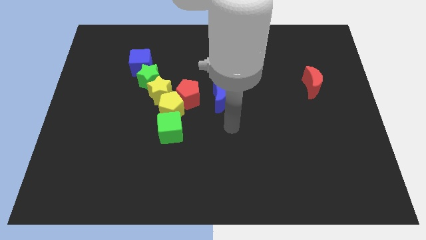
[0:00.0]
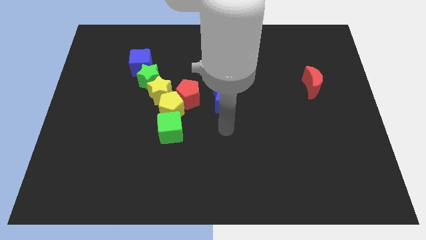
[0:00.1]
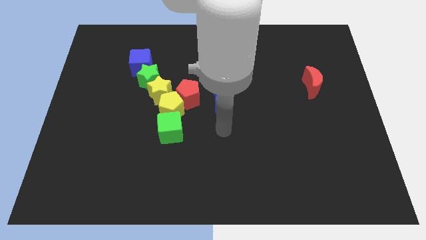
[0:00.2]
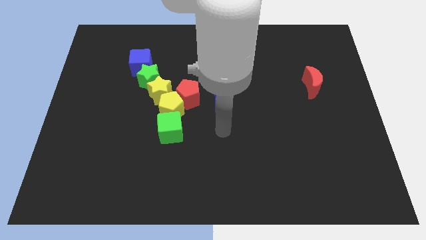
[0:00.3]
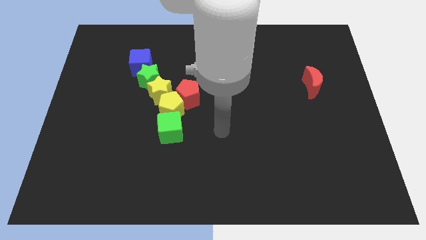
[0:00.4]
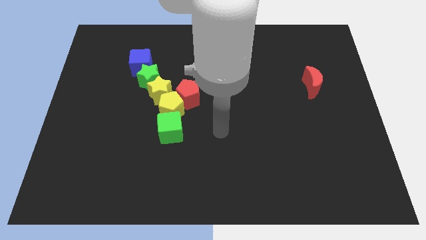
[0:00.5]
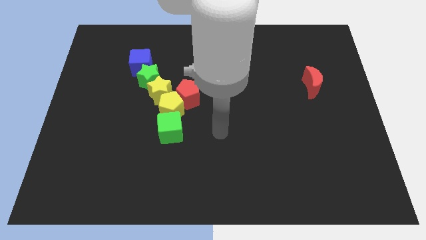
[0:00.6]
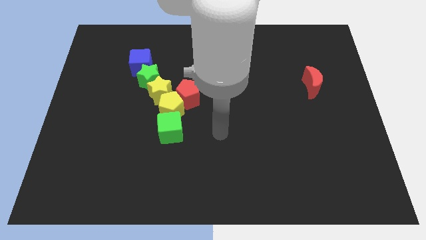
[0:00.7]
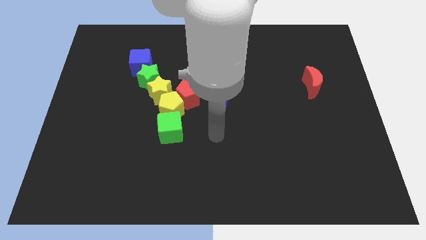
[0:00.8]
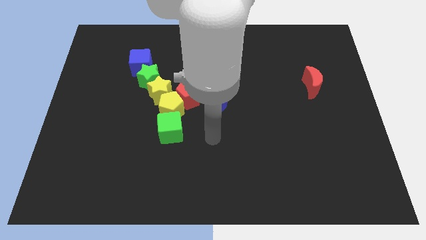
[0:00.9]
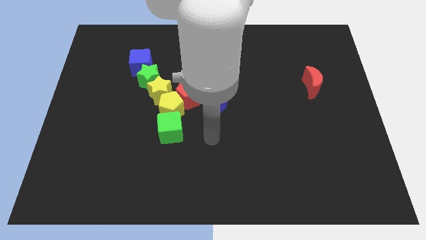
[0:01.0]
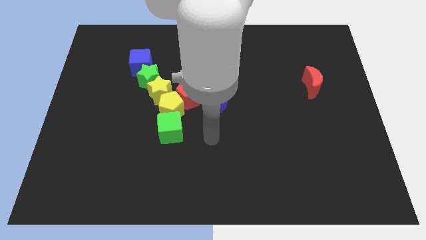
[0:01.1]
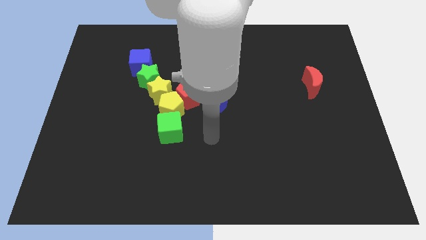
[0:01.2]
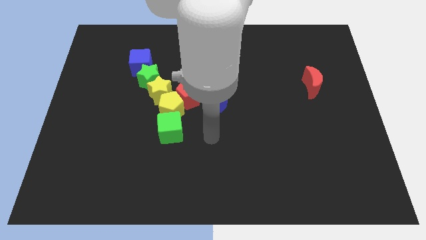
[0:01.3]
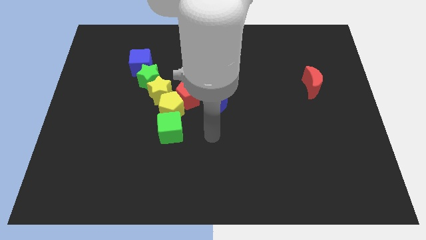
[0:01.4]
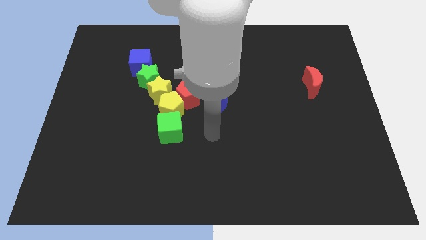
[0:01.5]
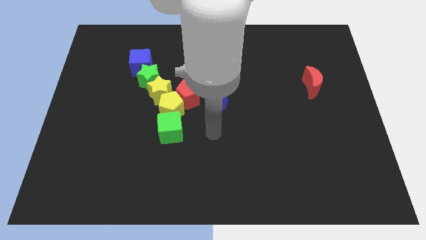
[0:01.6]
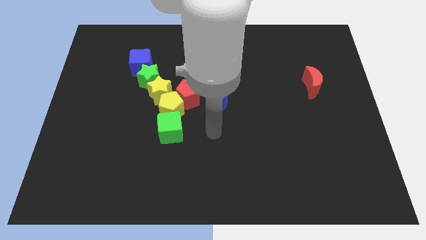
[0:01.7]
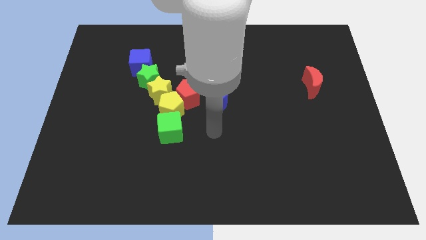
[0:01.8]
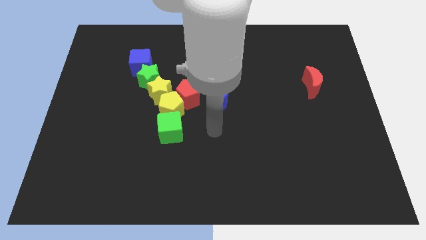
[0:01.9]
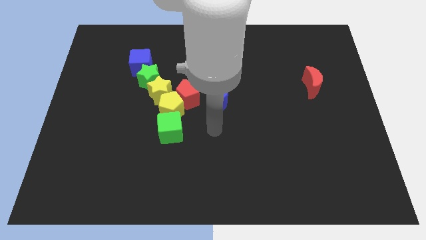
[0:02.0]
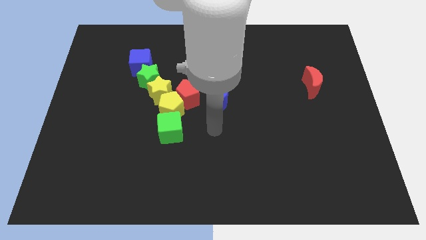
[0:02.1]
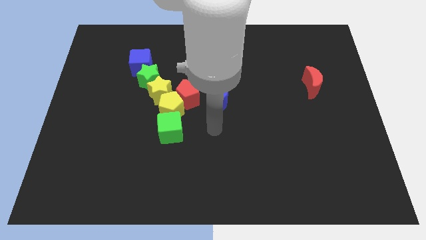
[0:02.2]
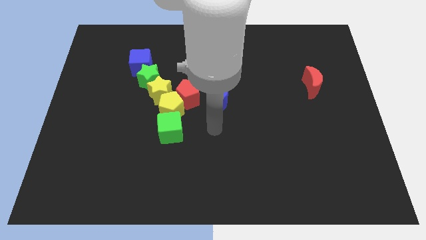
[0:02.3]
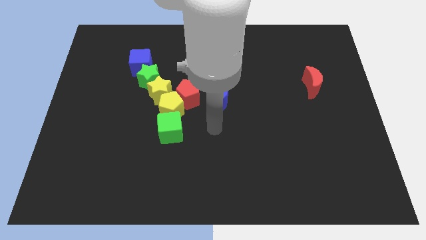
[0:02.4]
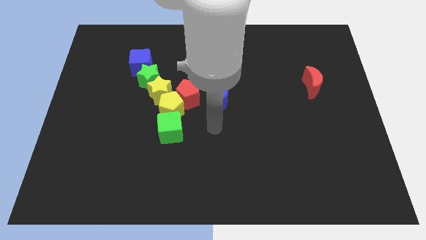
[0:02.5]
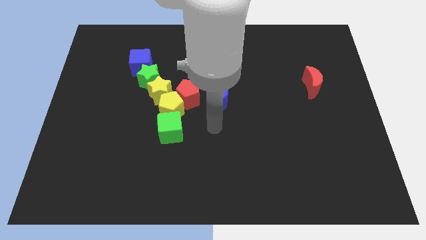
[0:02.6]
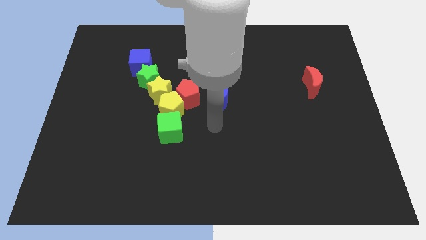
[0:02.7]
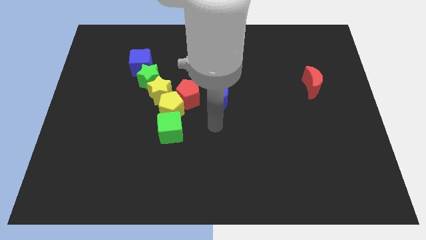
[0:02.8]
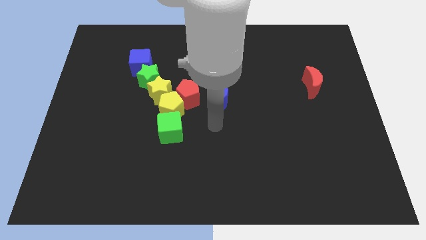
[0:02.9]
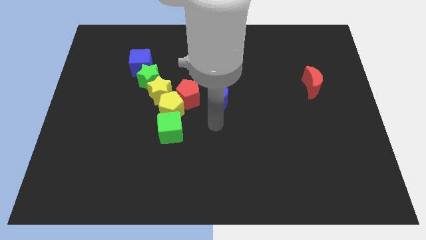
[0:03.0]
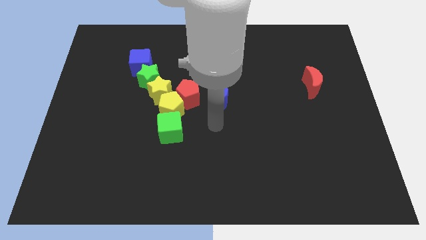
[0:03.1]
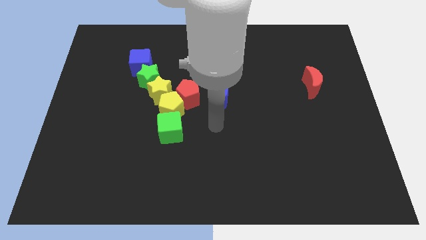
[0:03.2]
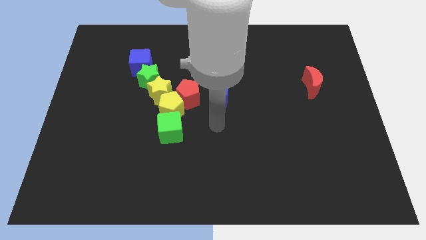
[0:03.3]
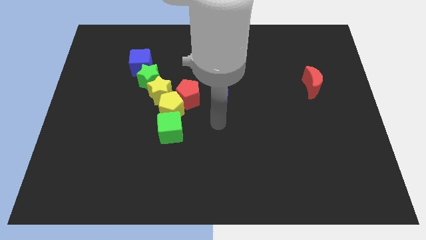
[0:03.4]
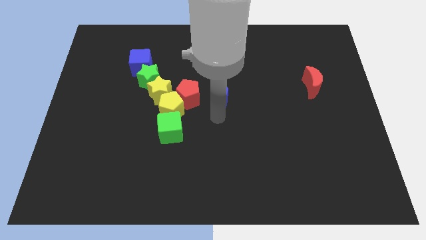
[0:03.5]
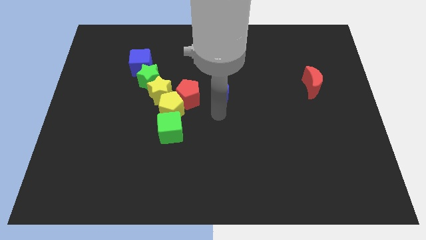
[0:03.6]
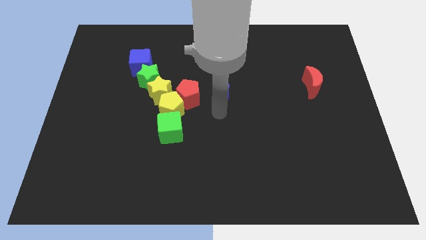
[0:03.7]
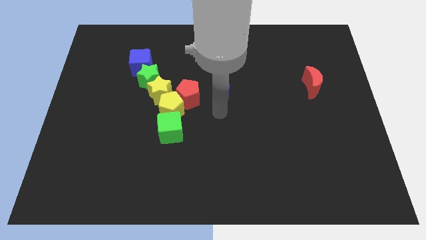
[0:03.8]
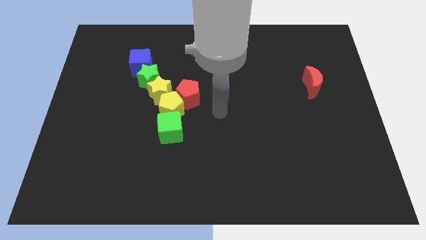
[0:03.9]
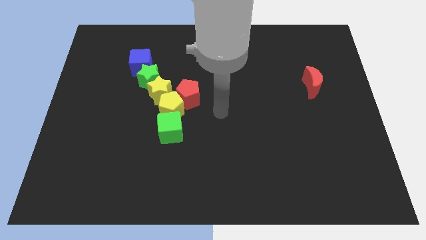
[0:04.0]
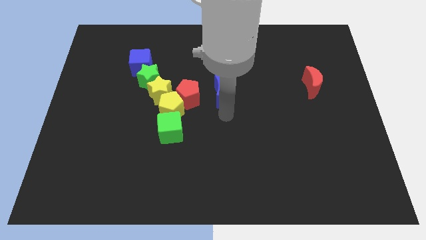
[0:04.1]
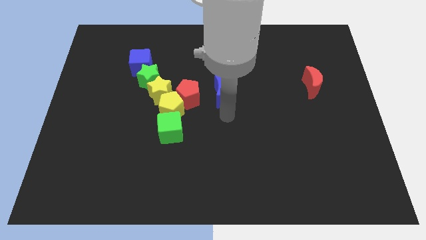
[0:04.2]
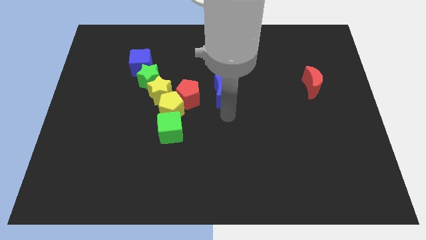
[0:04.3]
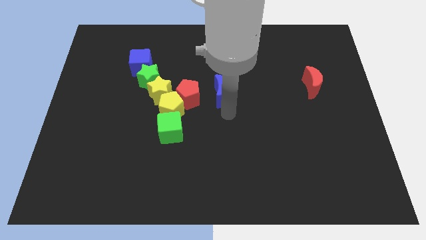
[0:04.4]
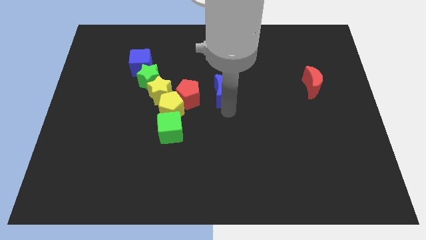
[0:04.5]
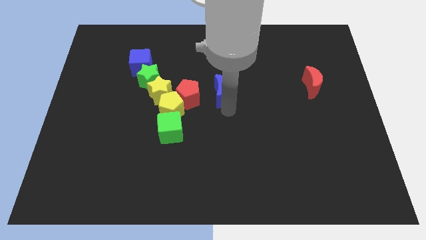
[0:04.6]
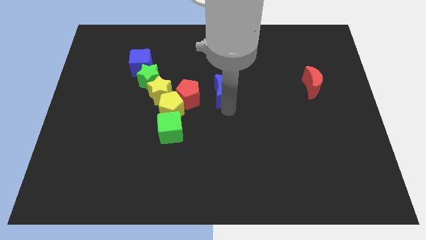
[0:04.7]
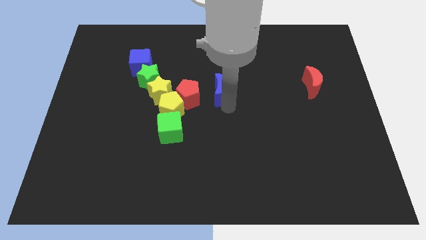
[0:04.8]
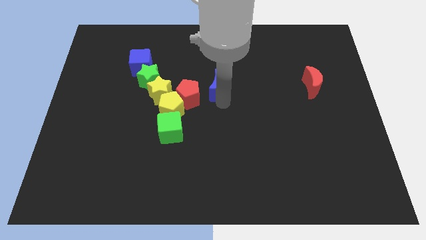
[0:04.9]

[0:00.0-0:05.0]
move the blue crescent to the top of the board

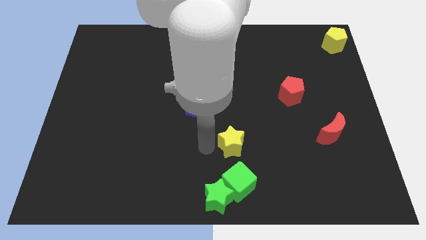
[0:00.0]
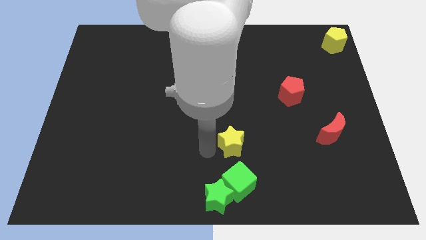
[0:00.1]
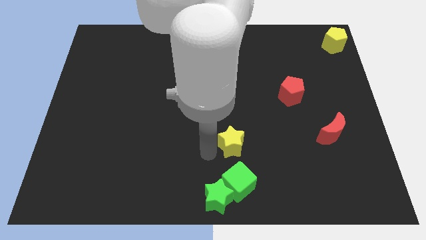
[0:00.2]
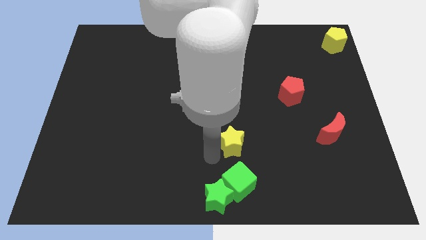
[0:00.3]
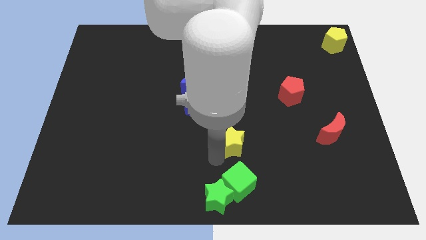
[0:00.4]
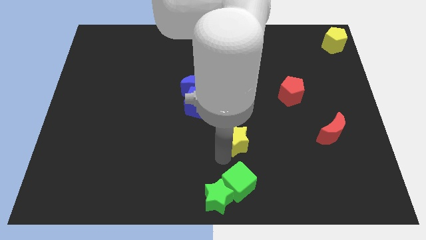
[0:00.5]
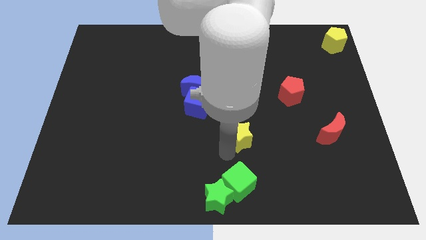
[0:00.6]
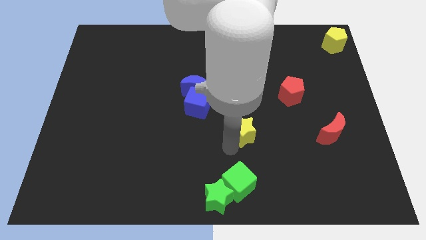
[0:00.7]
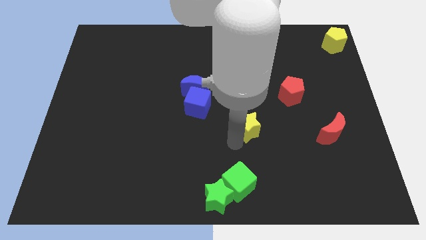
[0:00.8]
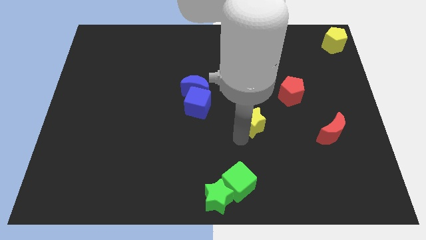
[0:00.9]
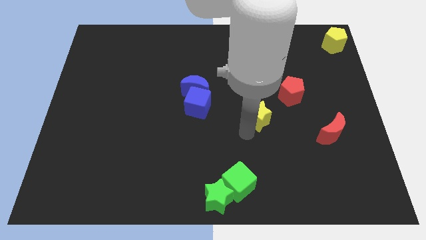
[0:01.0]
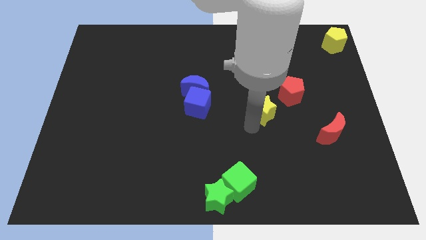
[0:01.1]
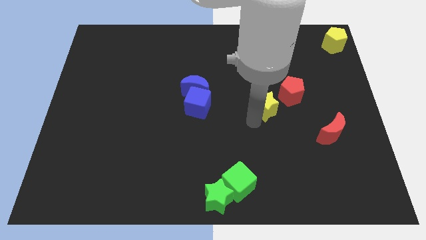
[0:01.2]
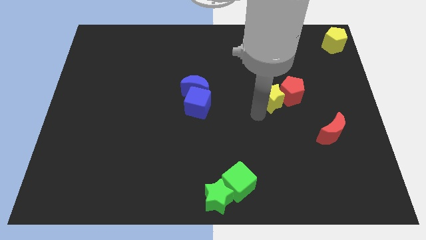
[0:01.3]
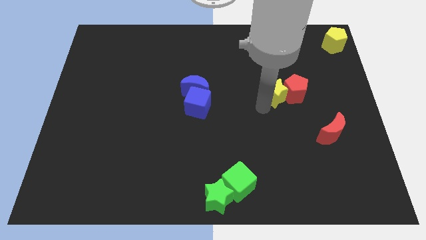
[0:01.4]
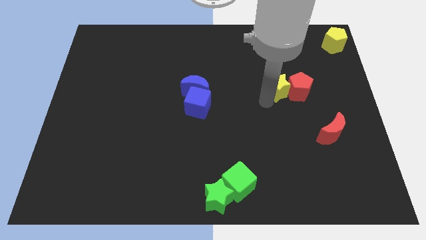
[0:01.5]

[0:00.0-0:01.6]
place the yellow star to the left of the red pentagon

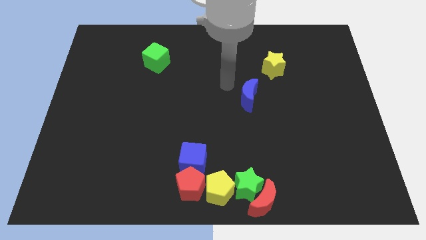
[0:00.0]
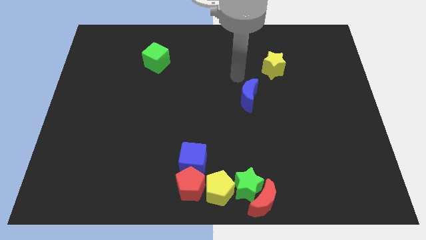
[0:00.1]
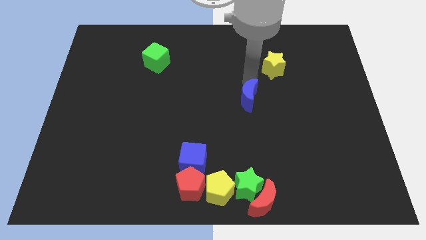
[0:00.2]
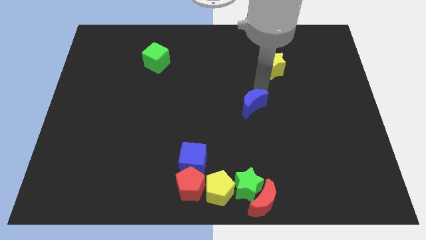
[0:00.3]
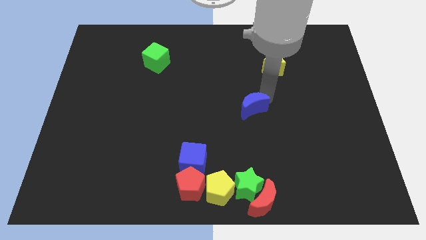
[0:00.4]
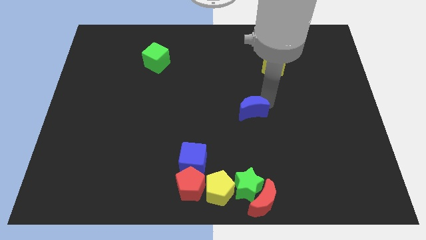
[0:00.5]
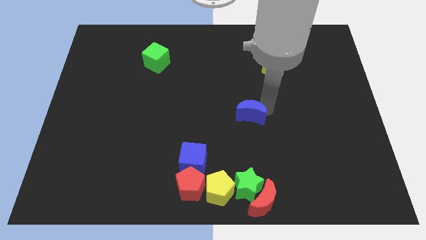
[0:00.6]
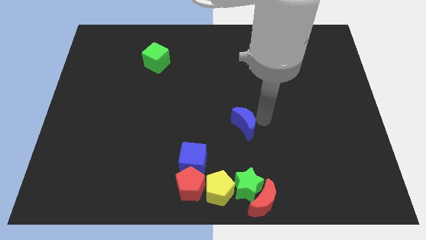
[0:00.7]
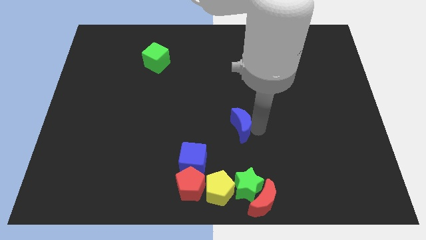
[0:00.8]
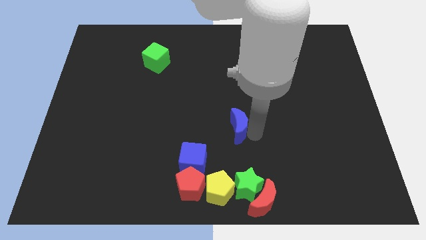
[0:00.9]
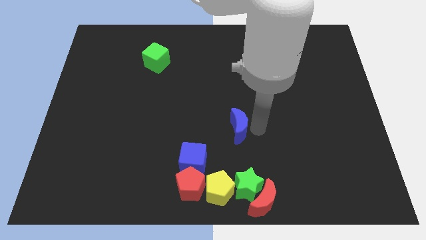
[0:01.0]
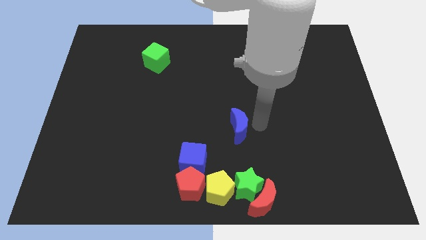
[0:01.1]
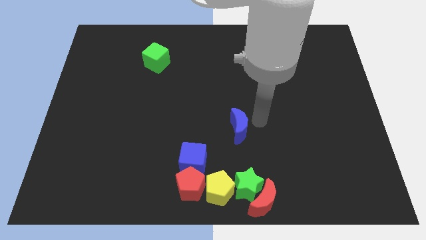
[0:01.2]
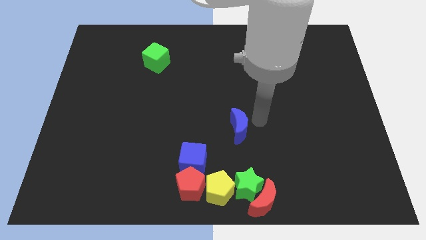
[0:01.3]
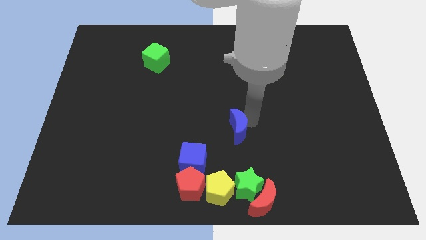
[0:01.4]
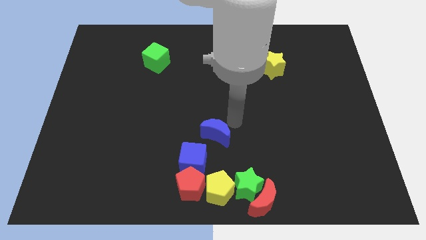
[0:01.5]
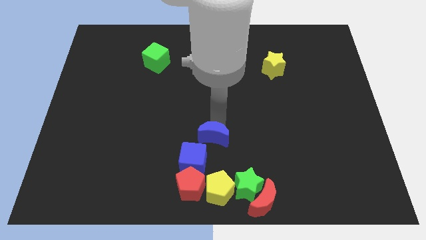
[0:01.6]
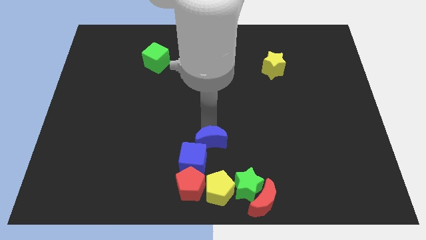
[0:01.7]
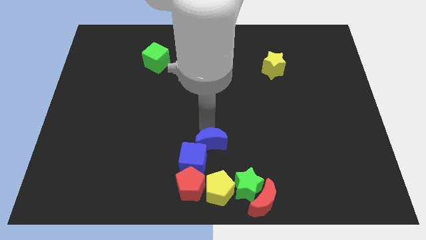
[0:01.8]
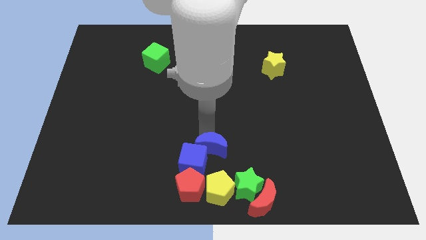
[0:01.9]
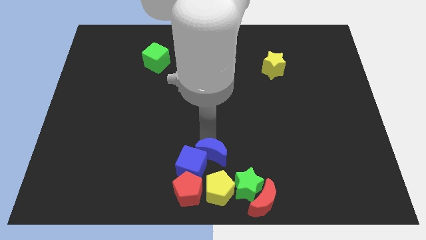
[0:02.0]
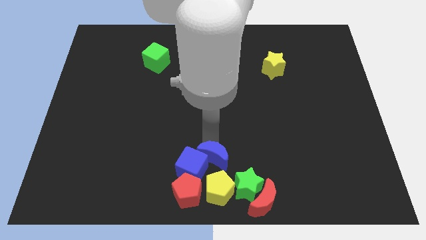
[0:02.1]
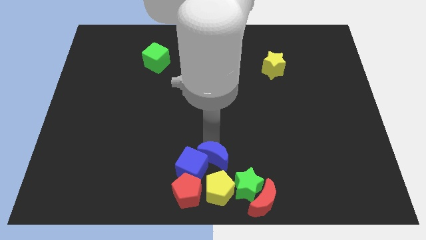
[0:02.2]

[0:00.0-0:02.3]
push the blue moon into blue cube
